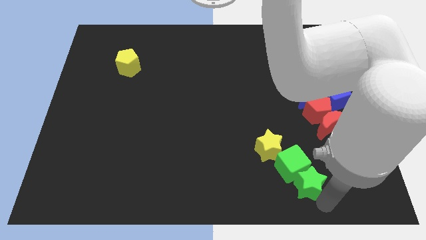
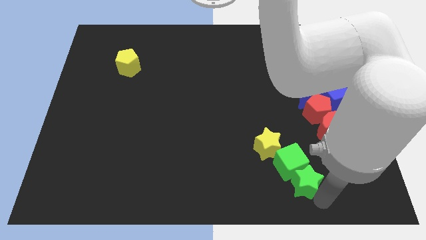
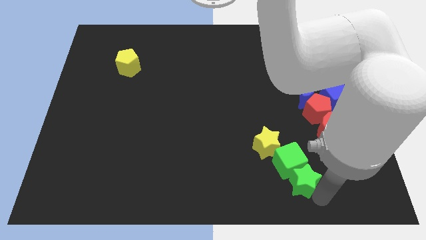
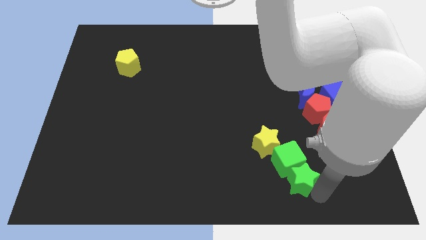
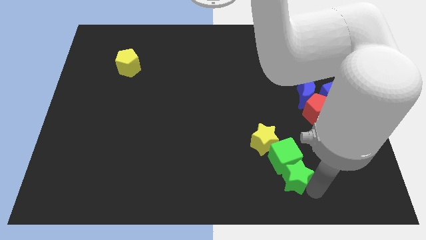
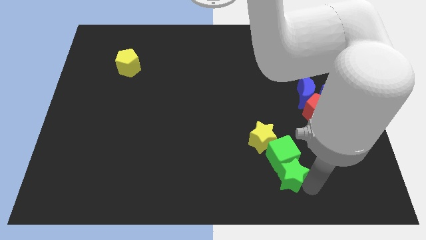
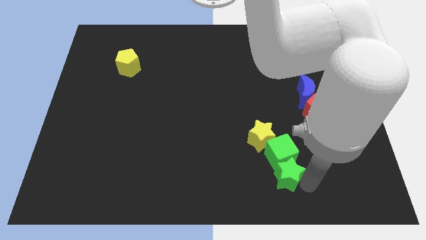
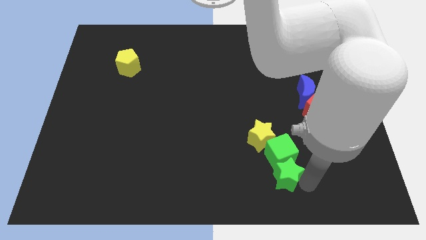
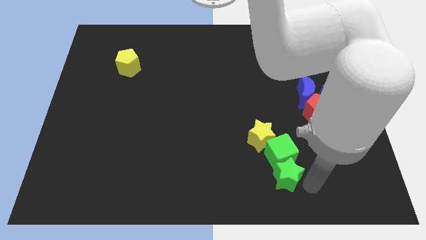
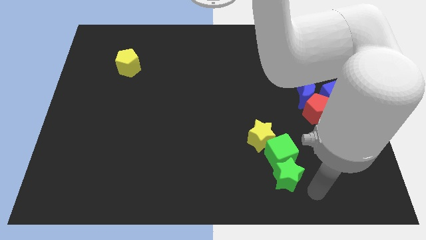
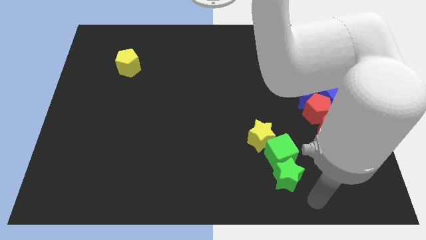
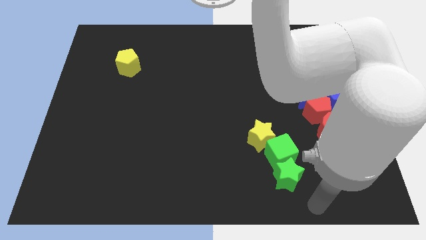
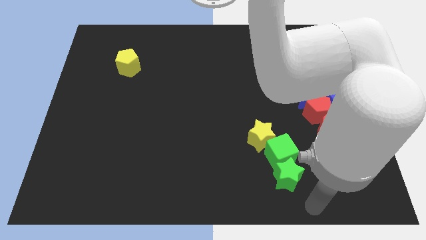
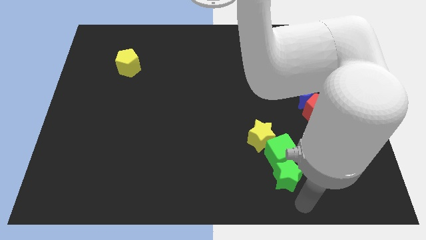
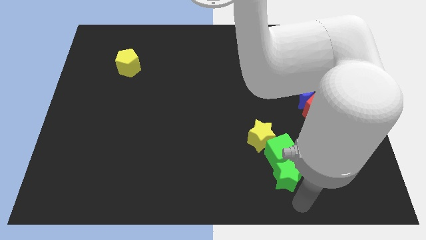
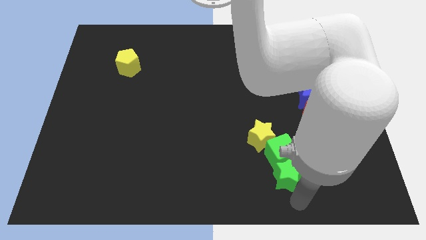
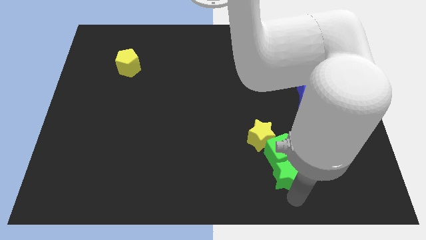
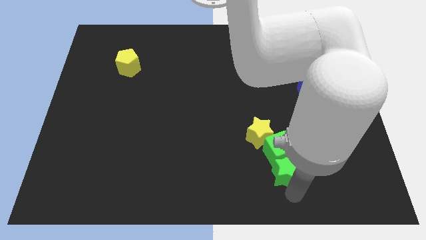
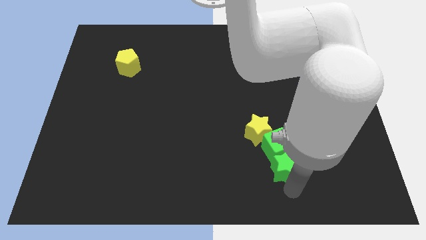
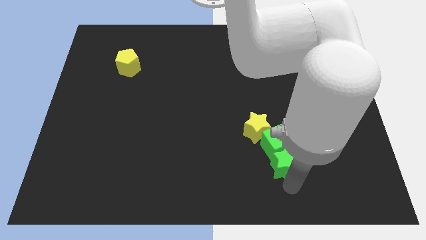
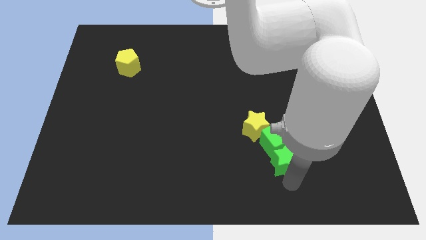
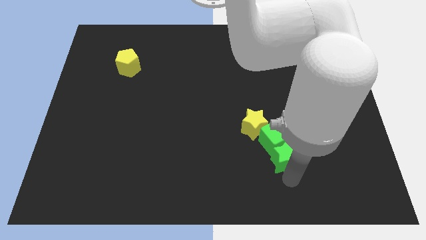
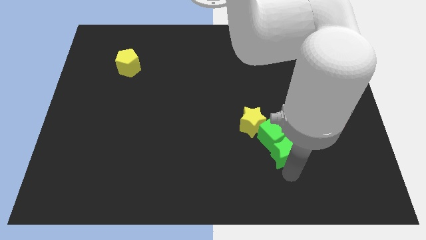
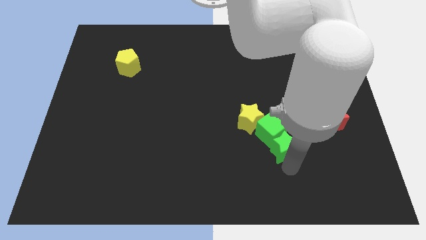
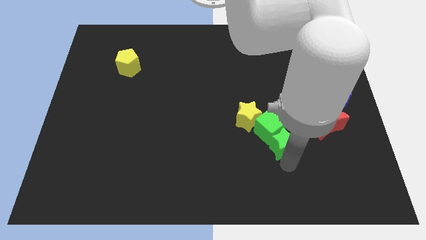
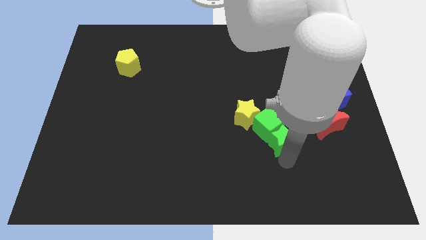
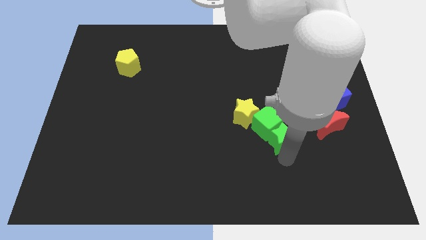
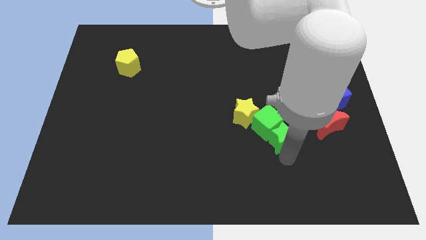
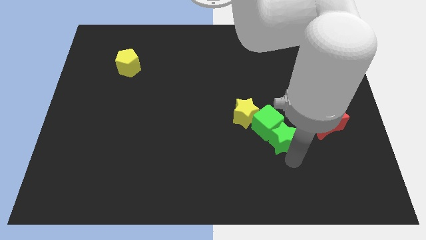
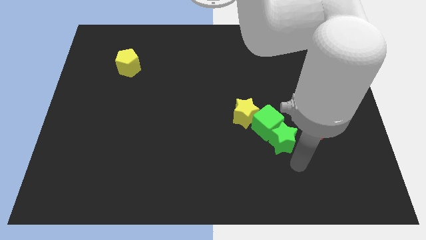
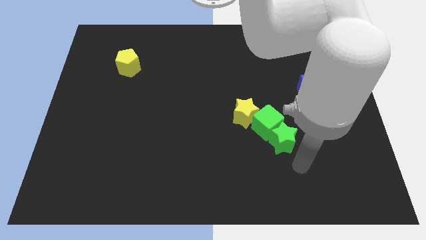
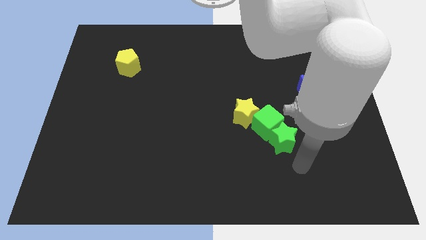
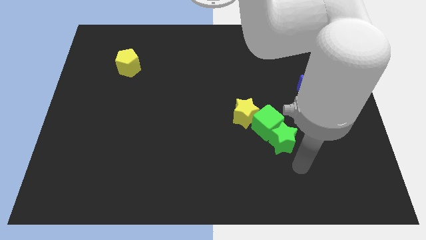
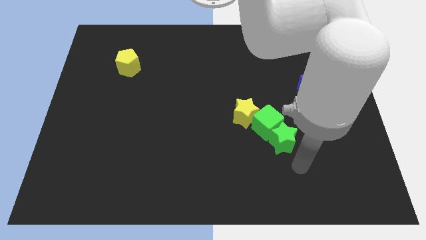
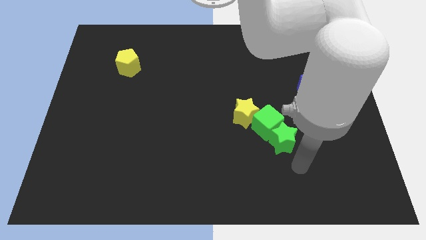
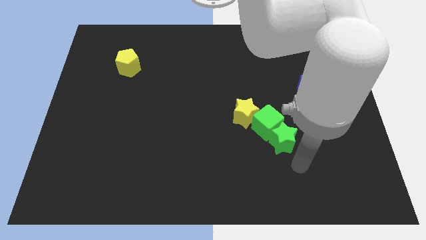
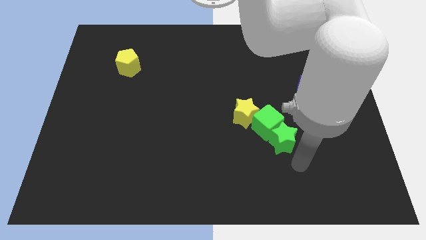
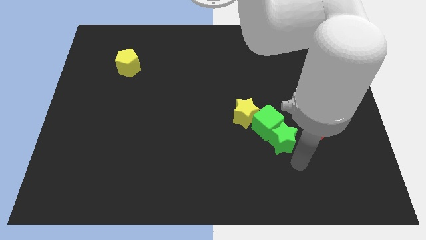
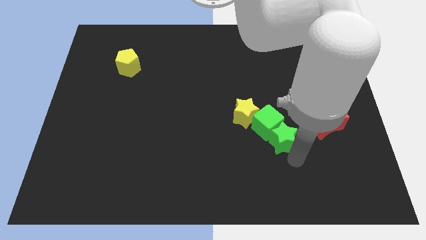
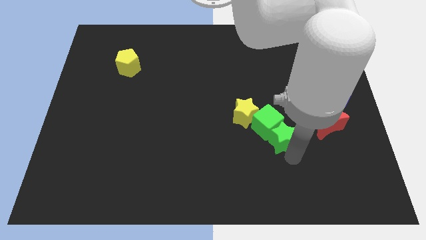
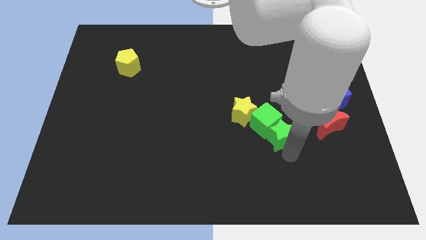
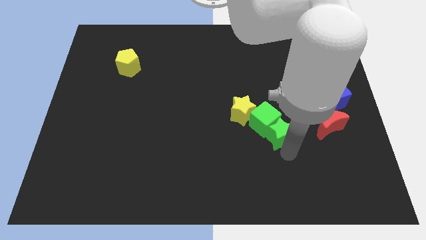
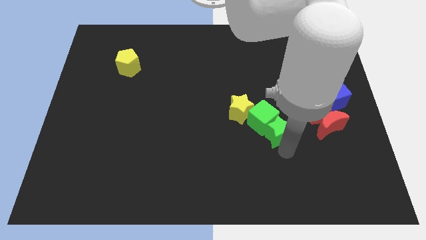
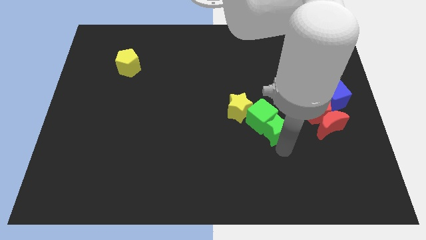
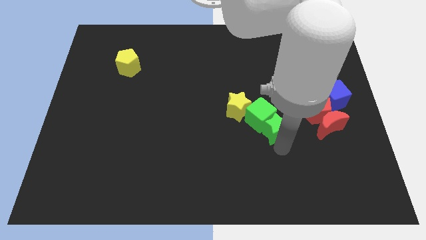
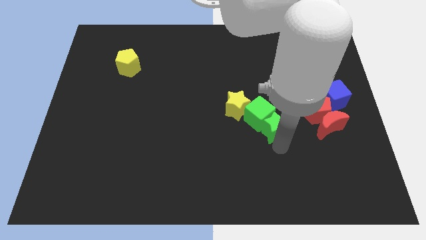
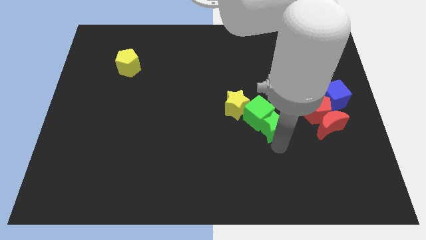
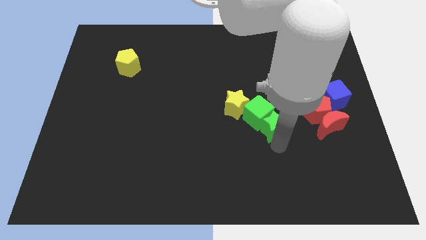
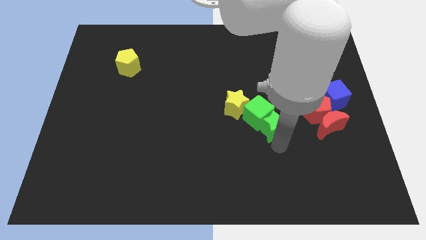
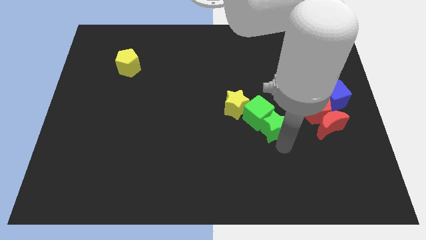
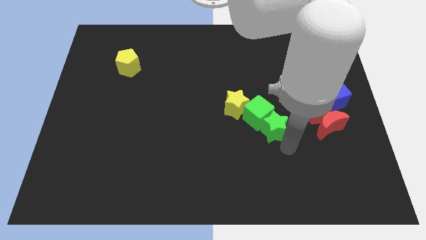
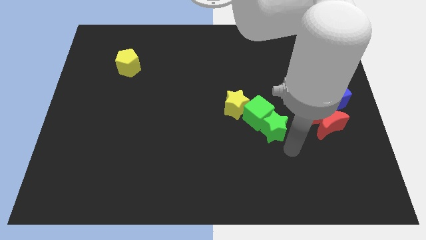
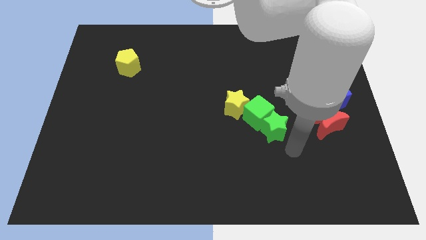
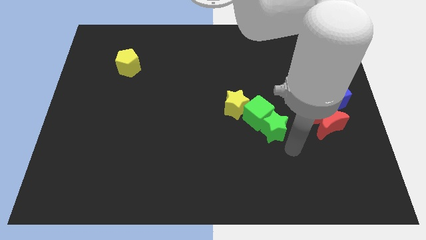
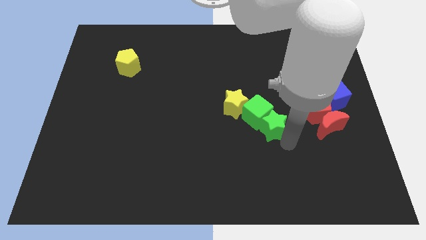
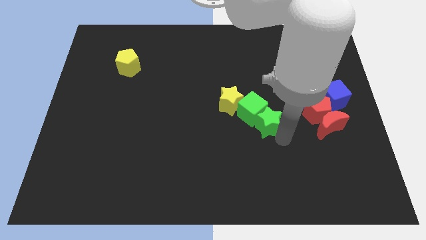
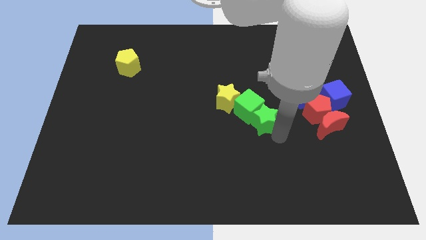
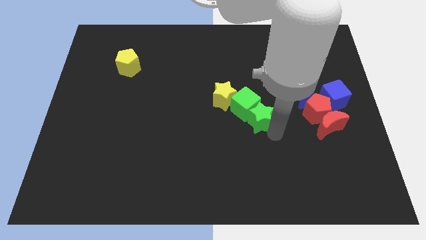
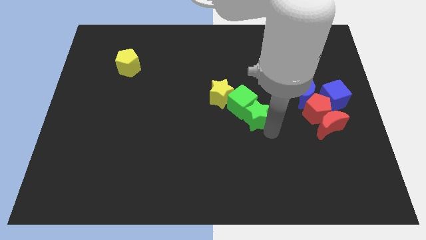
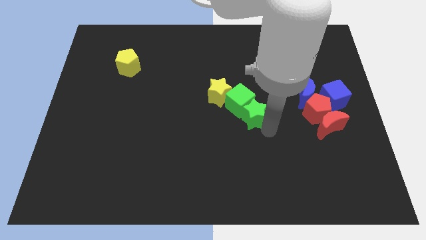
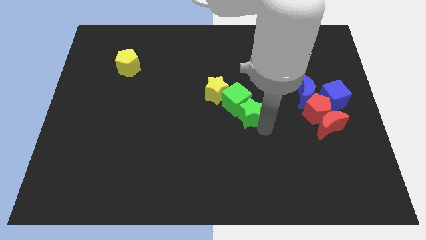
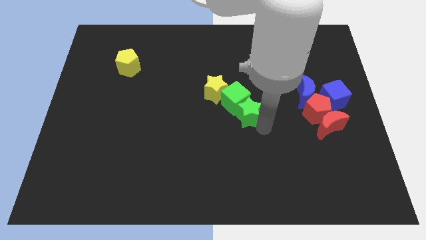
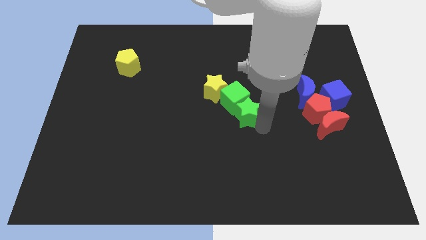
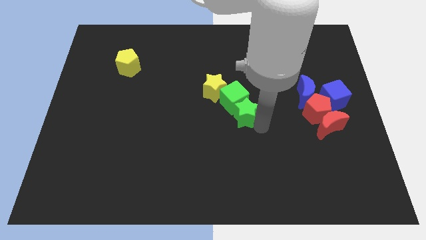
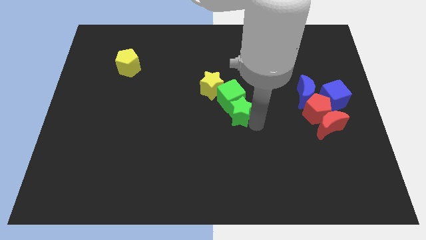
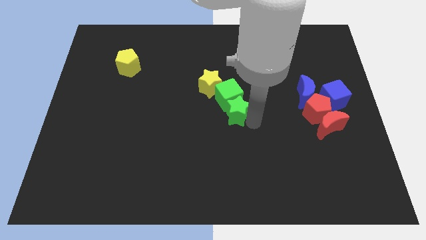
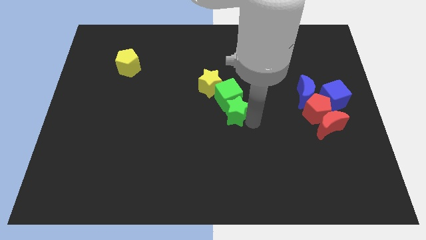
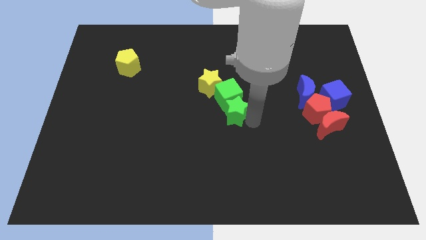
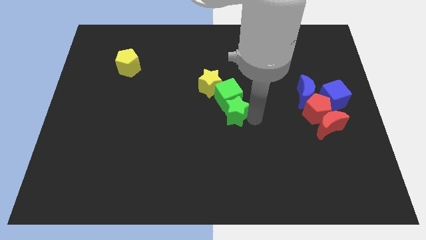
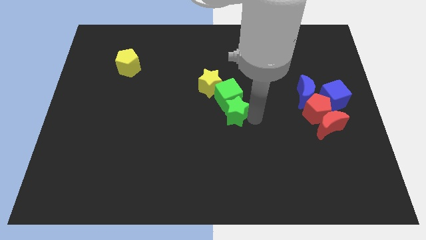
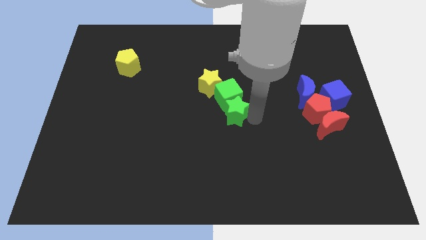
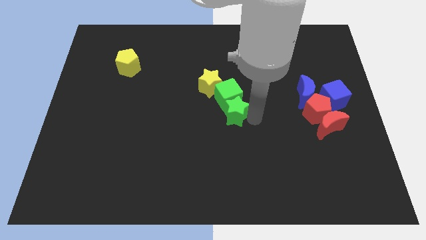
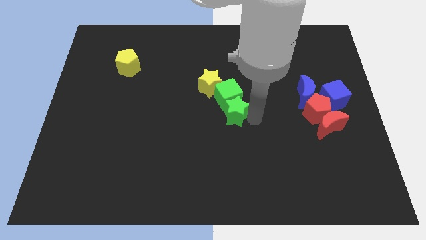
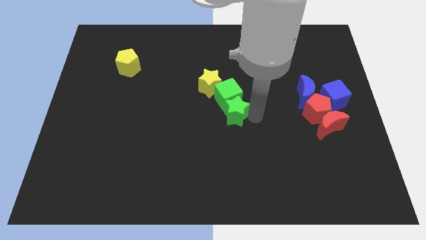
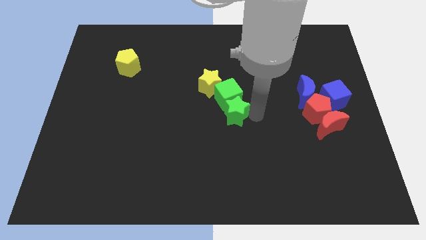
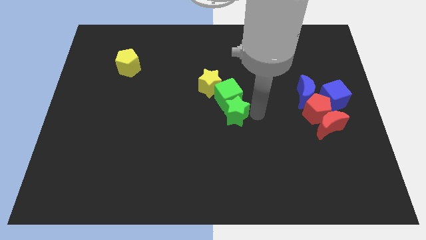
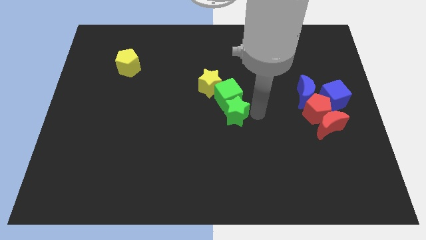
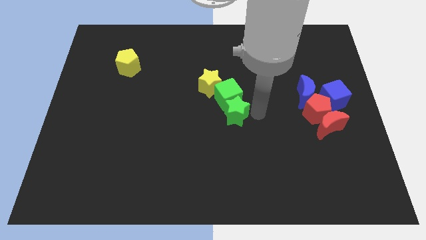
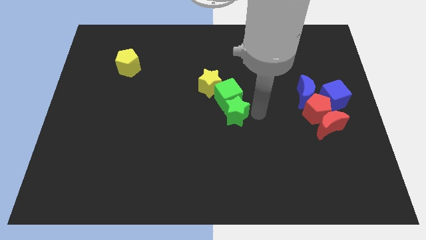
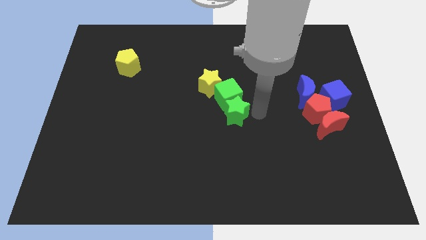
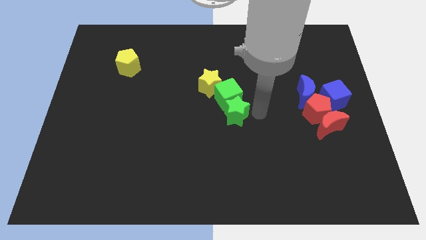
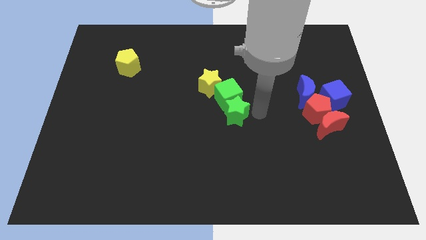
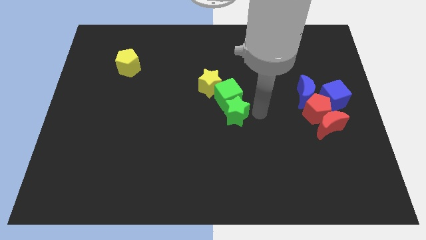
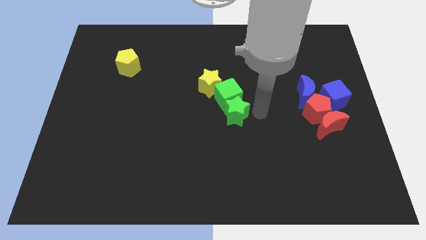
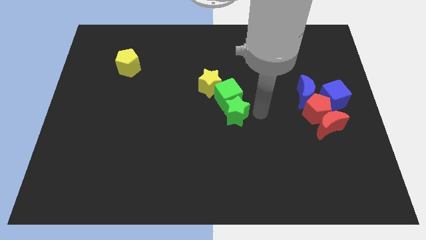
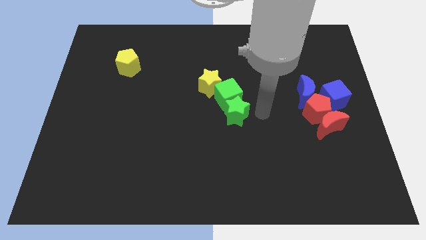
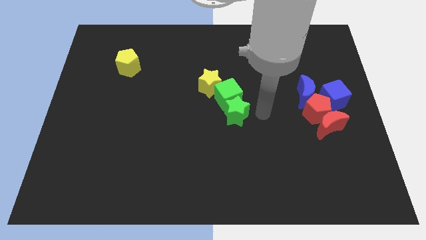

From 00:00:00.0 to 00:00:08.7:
move a group of blocks using green stargreen cube yellow star

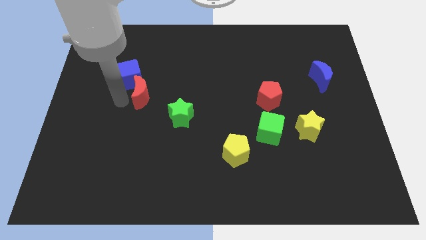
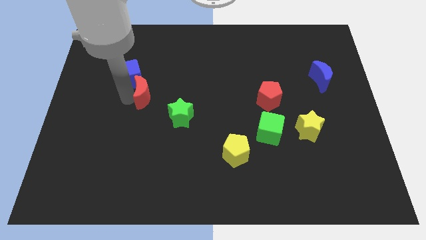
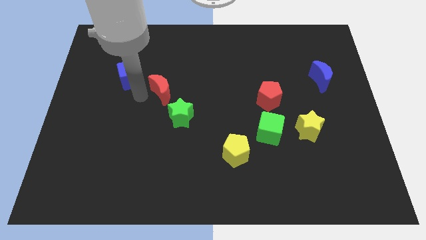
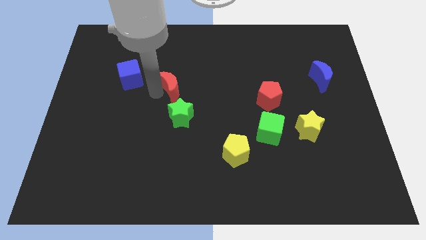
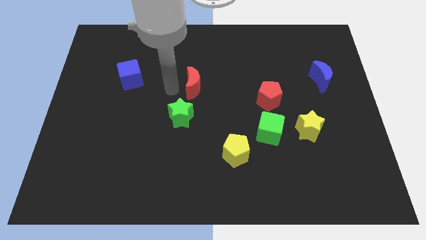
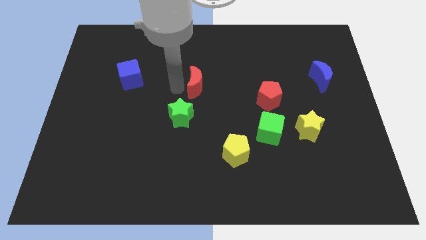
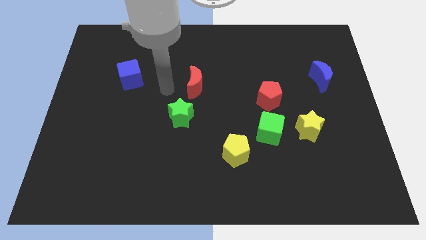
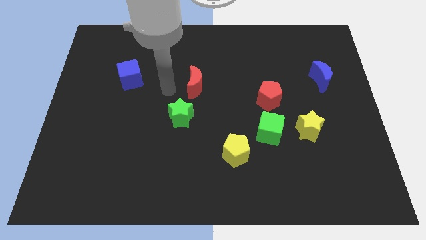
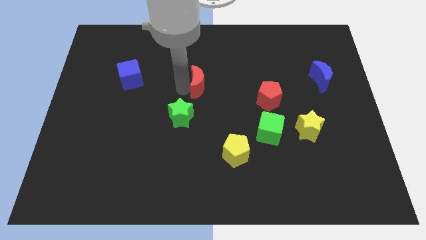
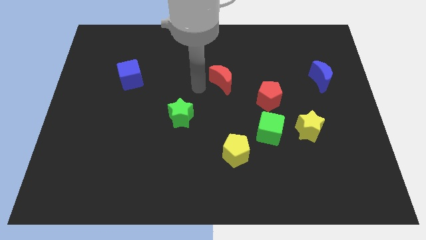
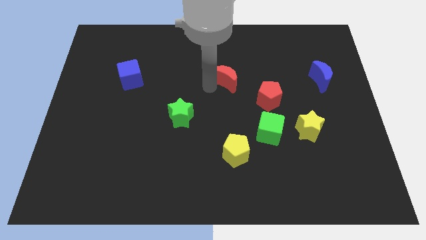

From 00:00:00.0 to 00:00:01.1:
separate red moon from blue cube
